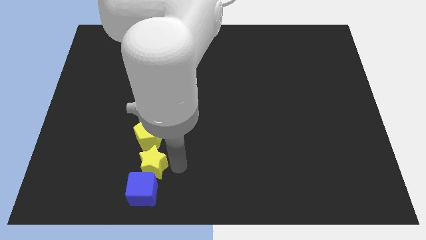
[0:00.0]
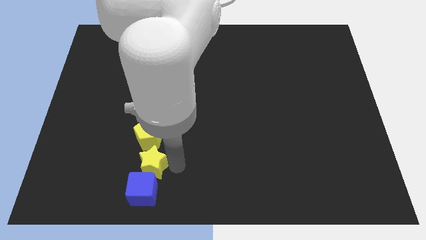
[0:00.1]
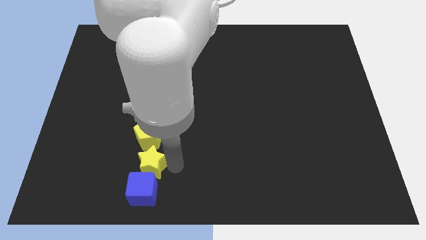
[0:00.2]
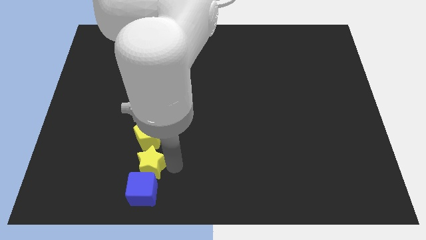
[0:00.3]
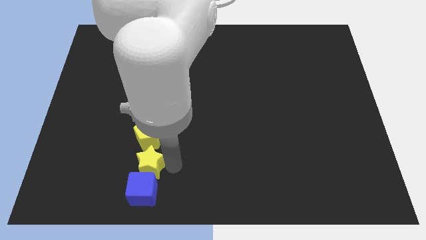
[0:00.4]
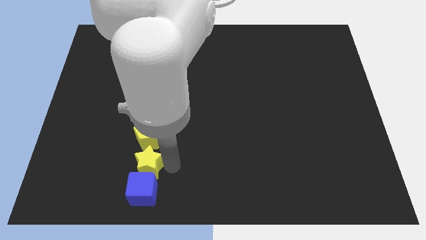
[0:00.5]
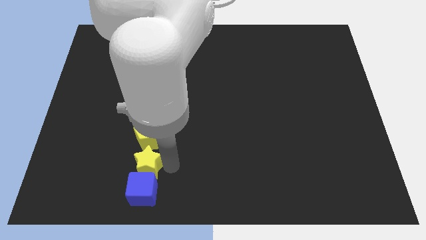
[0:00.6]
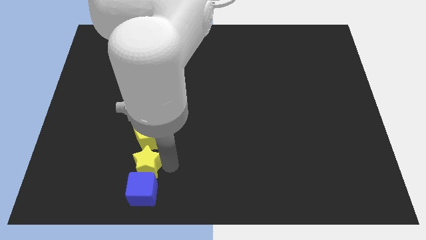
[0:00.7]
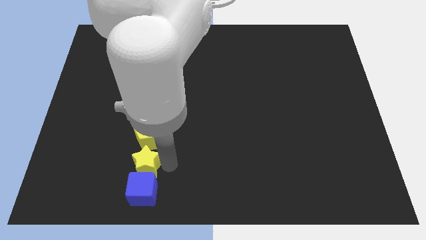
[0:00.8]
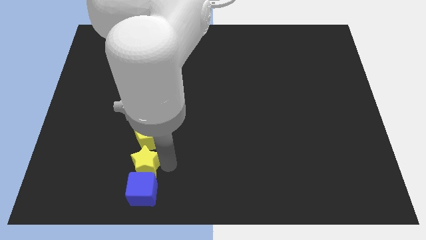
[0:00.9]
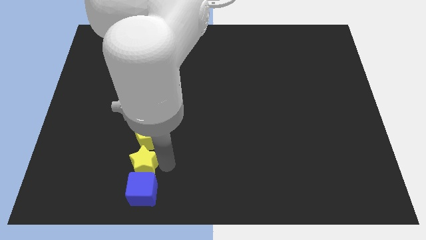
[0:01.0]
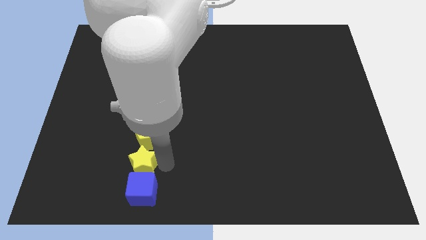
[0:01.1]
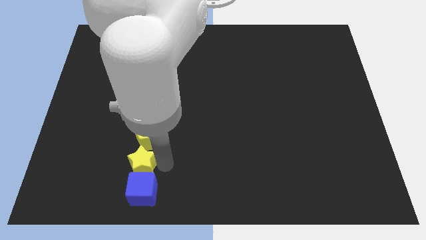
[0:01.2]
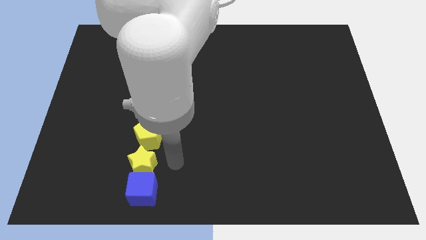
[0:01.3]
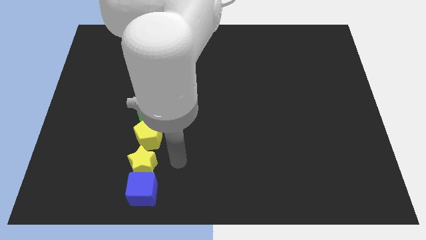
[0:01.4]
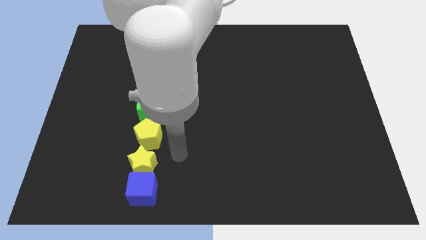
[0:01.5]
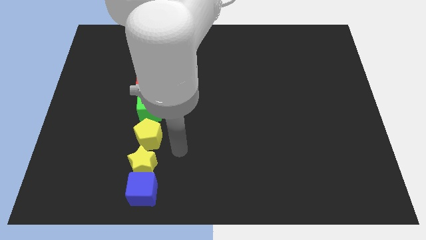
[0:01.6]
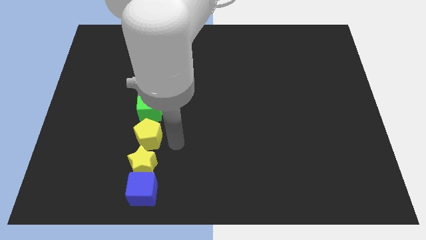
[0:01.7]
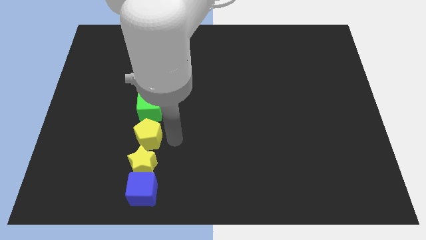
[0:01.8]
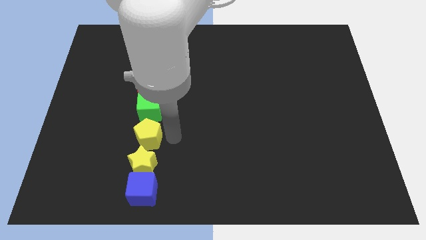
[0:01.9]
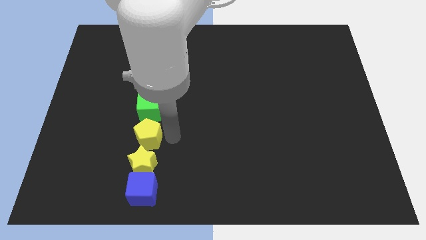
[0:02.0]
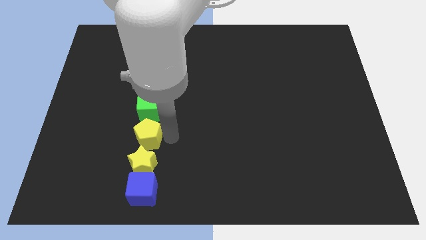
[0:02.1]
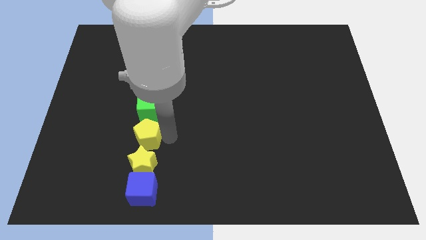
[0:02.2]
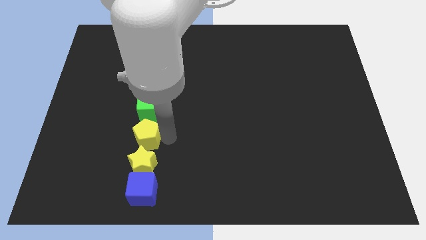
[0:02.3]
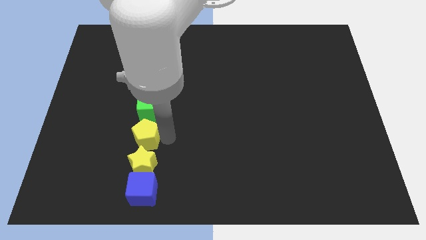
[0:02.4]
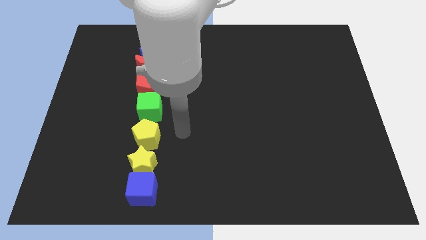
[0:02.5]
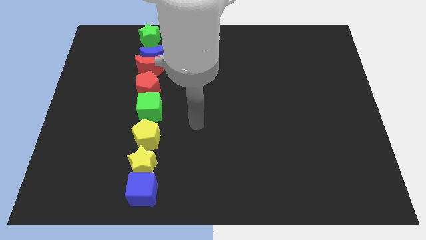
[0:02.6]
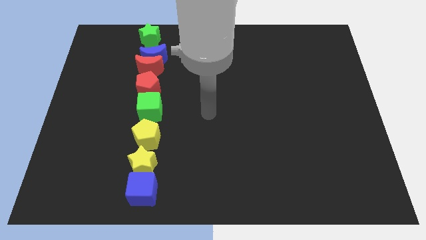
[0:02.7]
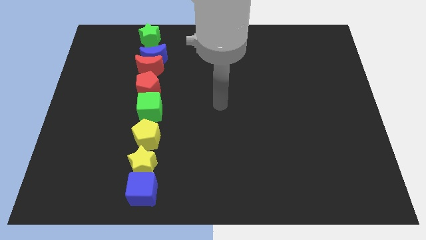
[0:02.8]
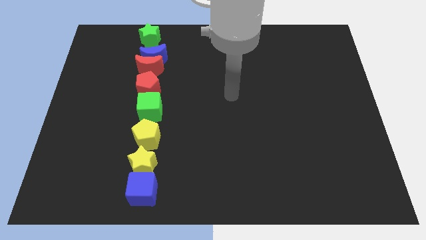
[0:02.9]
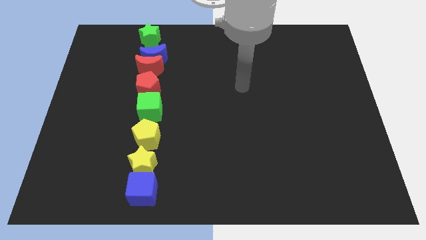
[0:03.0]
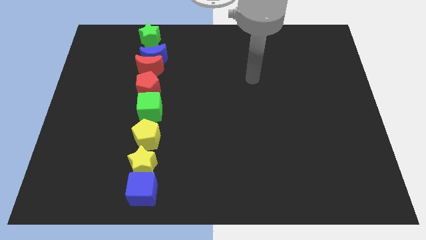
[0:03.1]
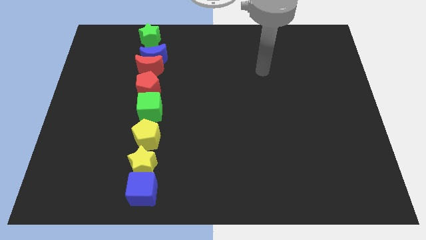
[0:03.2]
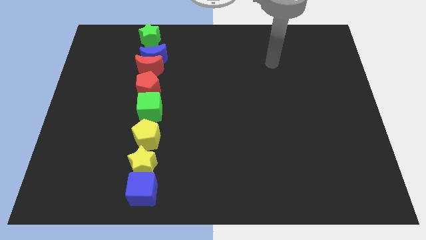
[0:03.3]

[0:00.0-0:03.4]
place the yellow star between the yellow pentagon and blue cube to form a vertical line

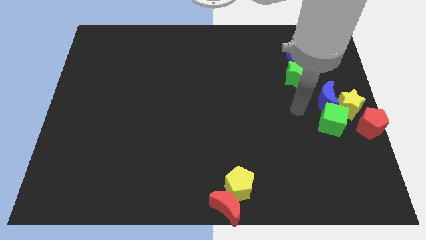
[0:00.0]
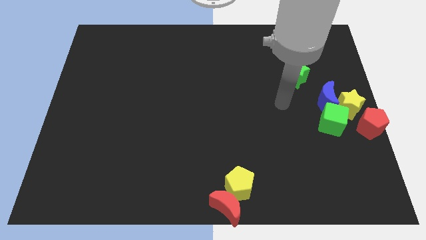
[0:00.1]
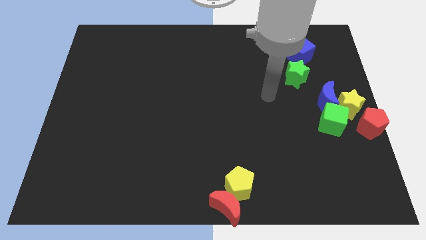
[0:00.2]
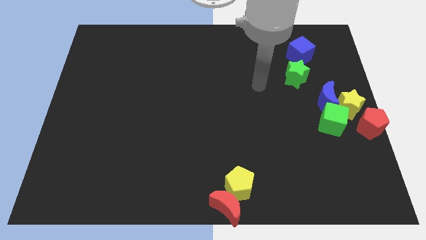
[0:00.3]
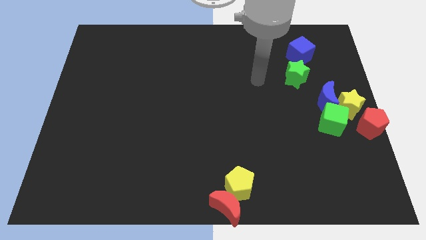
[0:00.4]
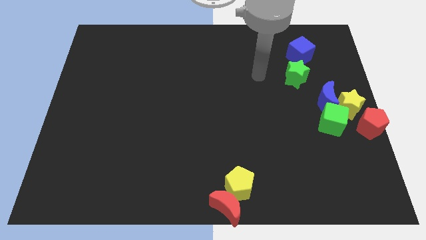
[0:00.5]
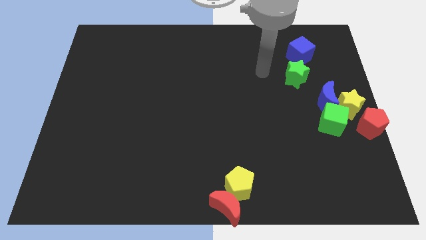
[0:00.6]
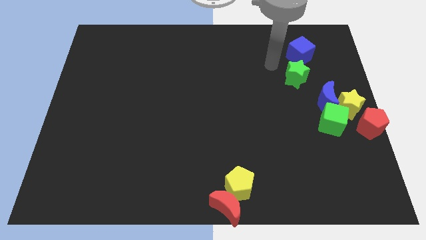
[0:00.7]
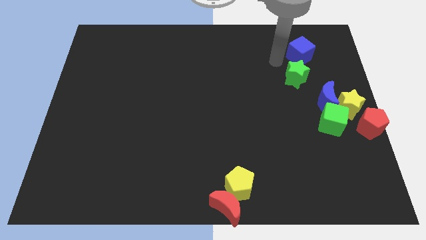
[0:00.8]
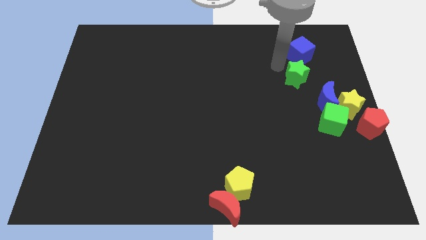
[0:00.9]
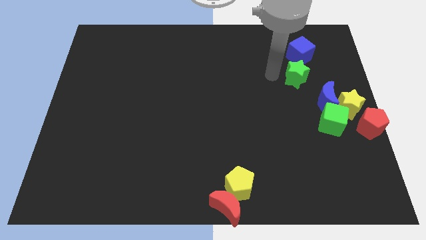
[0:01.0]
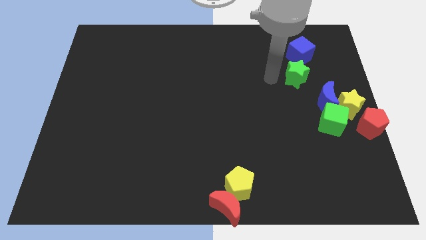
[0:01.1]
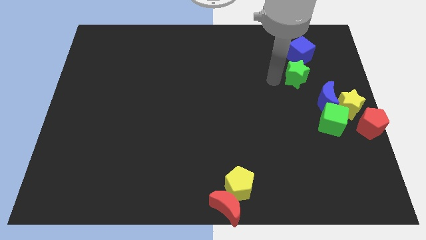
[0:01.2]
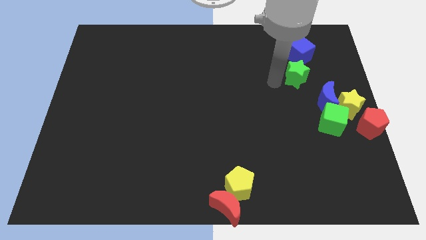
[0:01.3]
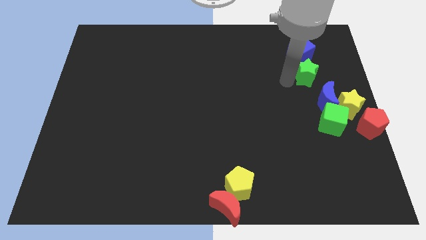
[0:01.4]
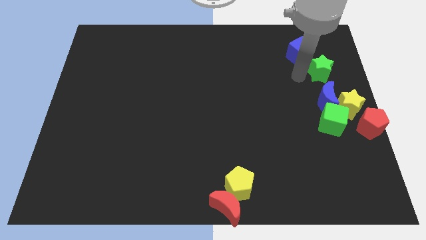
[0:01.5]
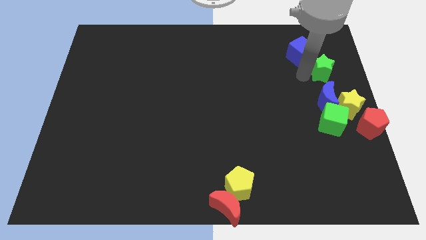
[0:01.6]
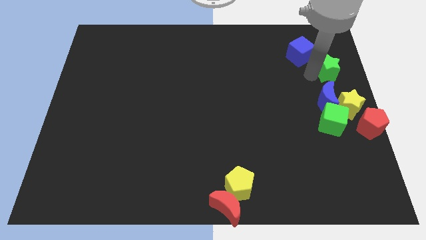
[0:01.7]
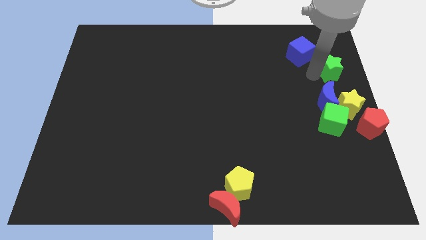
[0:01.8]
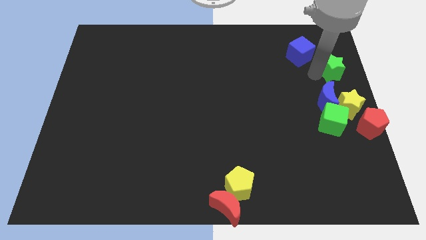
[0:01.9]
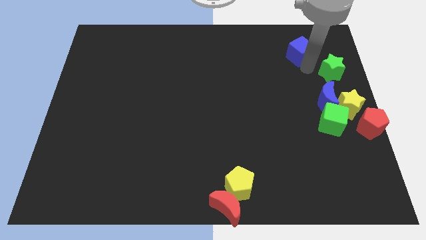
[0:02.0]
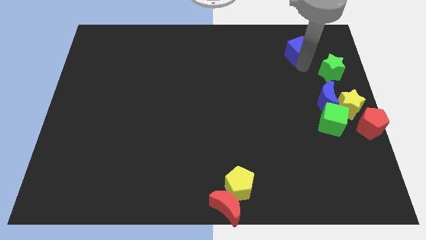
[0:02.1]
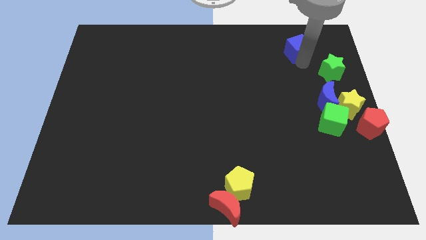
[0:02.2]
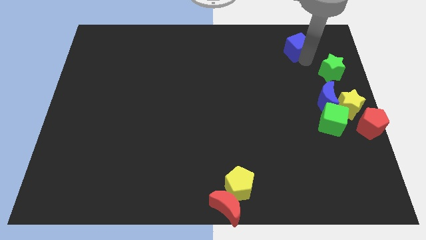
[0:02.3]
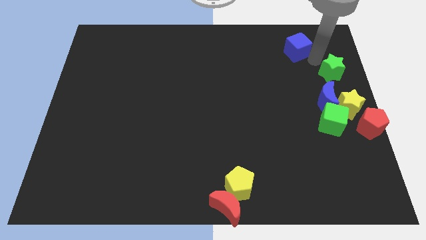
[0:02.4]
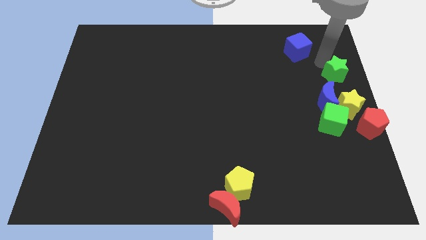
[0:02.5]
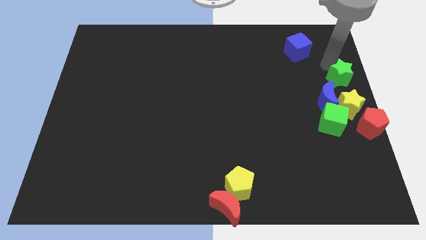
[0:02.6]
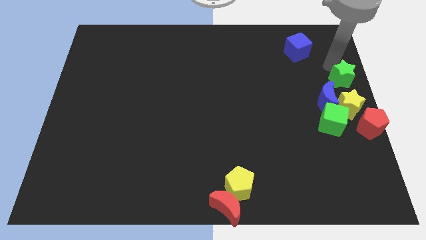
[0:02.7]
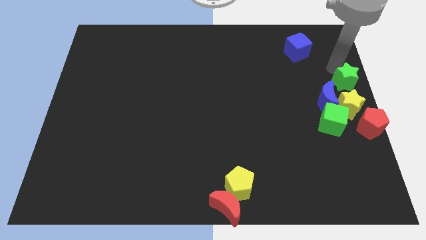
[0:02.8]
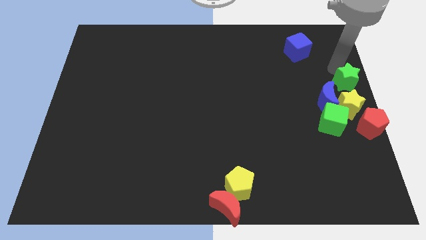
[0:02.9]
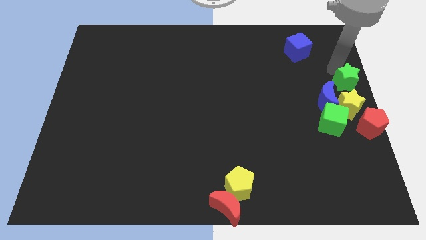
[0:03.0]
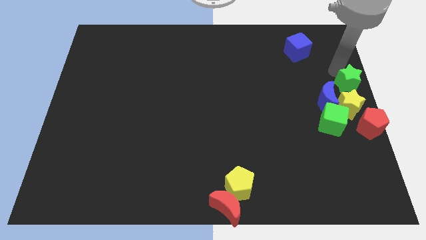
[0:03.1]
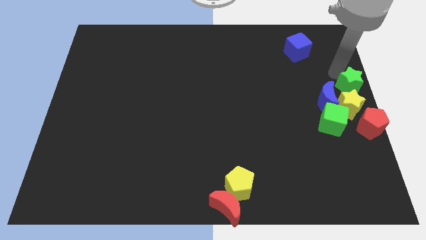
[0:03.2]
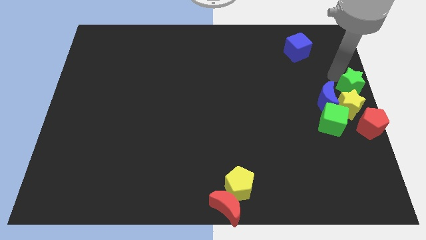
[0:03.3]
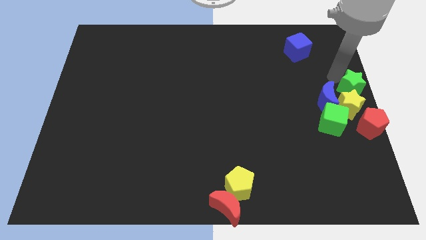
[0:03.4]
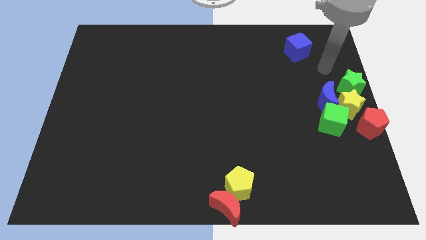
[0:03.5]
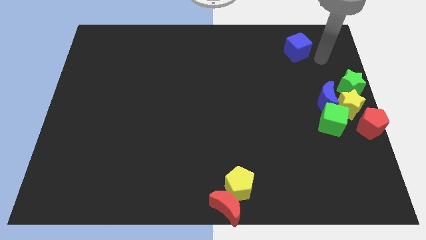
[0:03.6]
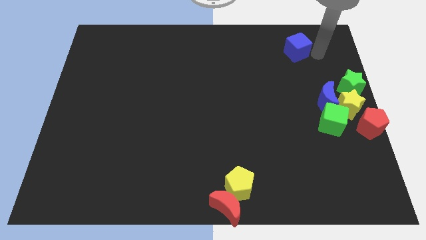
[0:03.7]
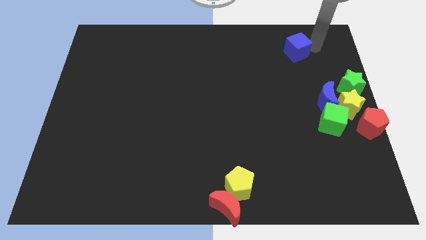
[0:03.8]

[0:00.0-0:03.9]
put the green star to the top side of the yellow star

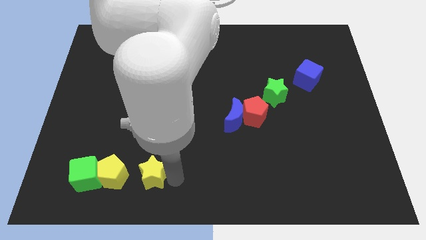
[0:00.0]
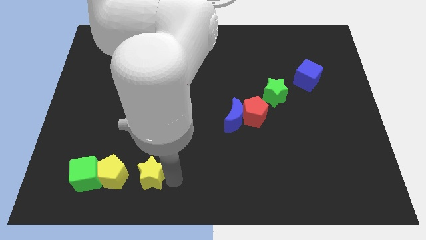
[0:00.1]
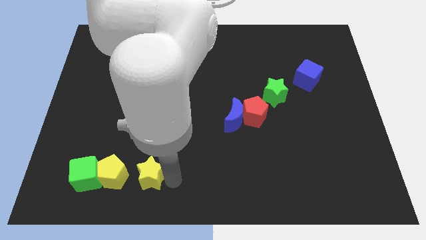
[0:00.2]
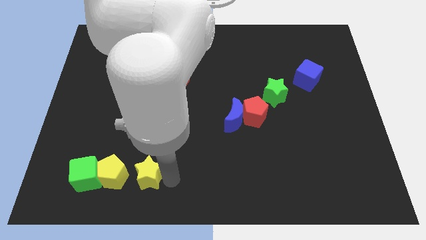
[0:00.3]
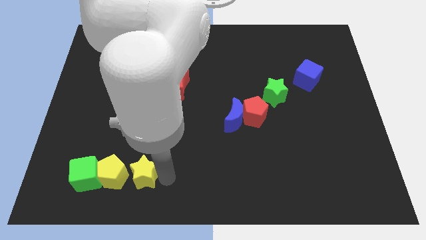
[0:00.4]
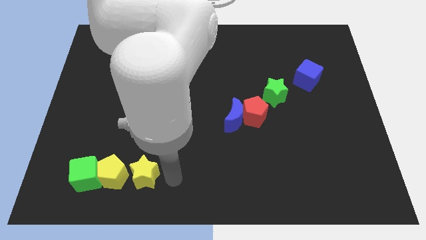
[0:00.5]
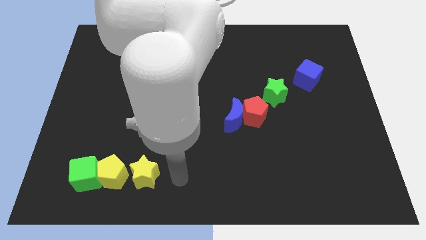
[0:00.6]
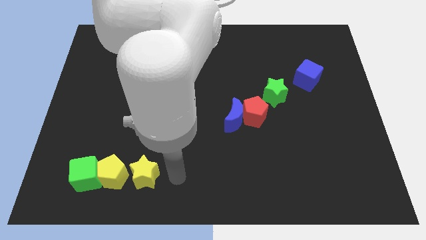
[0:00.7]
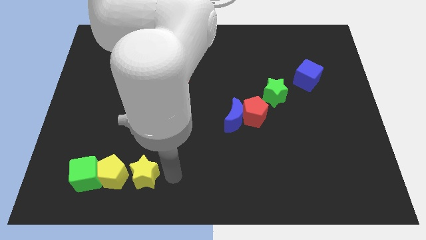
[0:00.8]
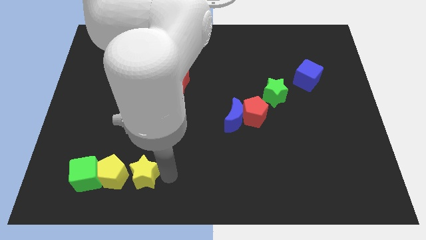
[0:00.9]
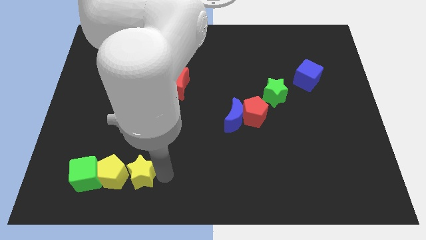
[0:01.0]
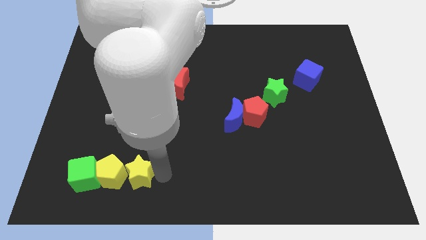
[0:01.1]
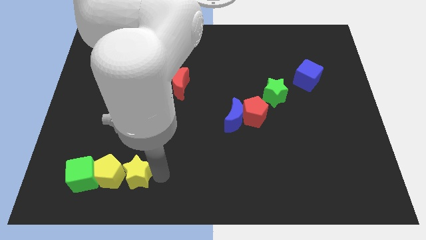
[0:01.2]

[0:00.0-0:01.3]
place yellow star near yellow pentagon

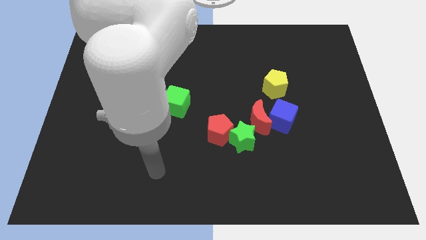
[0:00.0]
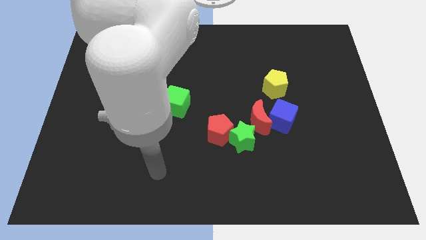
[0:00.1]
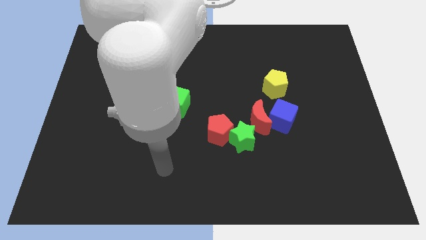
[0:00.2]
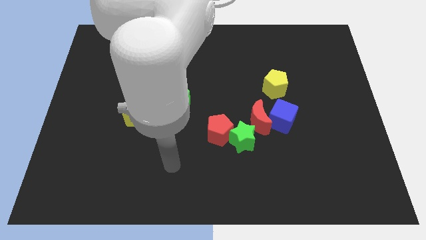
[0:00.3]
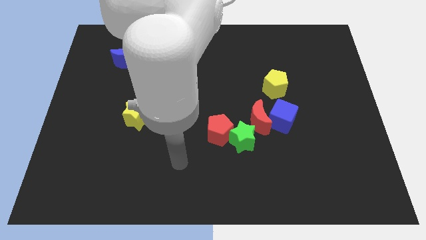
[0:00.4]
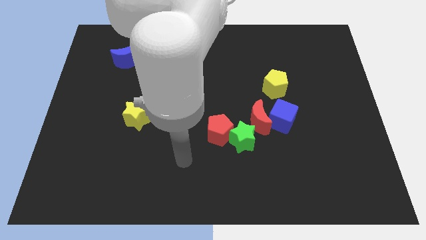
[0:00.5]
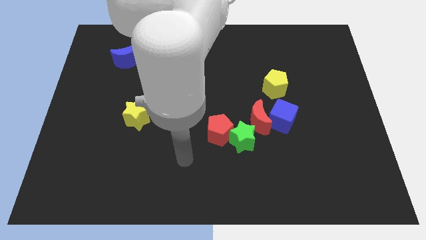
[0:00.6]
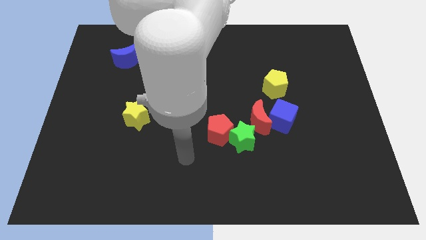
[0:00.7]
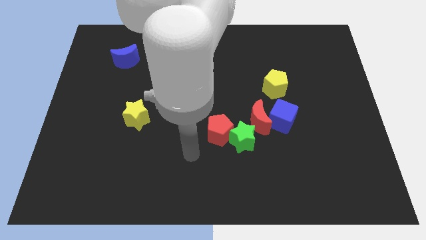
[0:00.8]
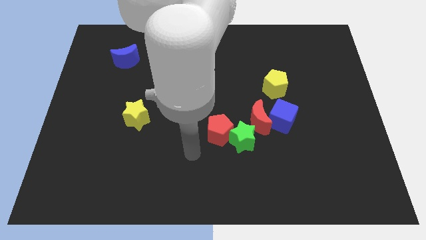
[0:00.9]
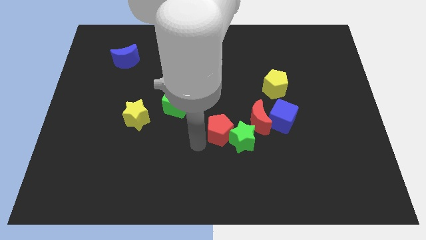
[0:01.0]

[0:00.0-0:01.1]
slide your hand to the bottom left of red pentagon
